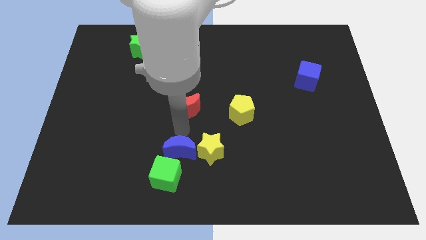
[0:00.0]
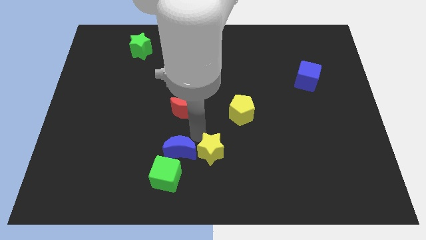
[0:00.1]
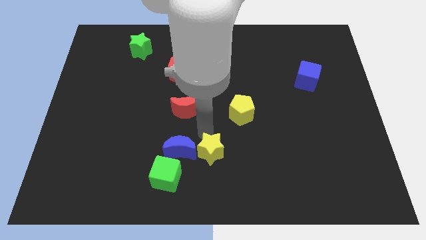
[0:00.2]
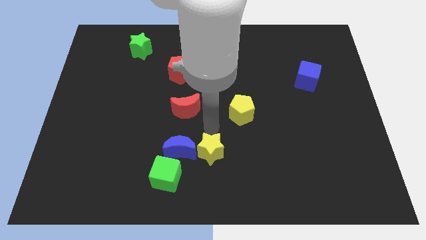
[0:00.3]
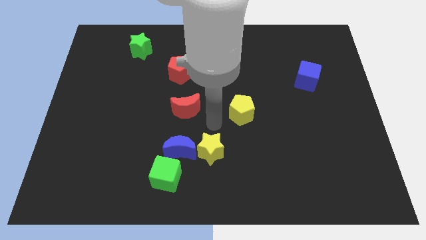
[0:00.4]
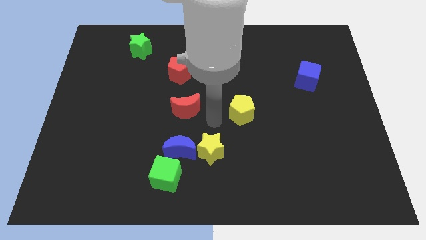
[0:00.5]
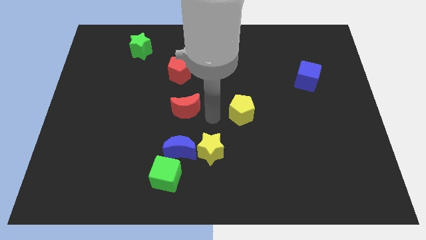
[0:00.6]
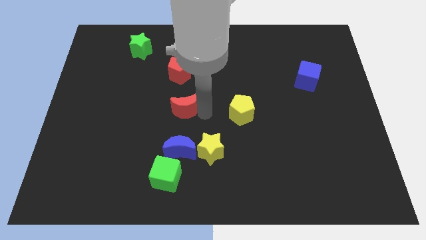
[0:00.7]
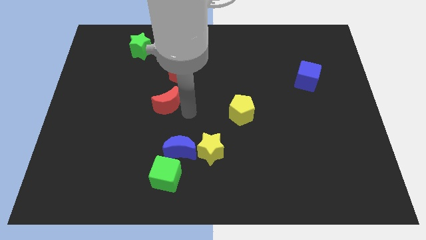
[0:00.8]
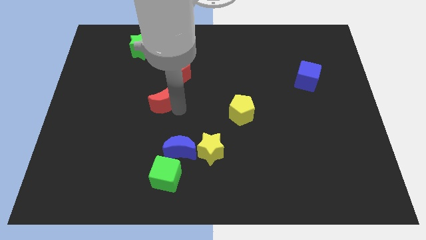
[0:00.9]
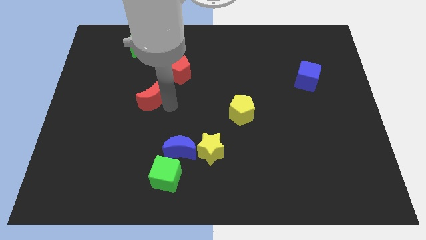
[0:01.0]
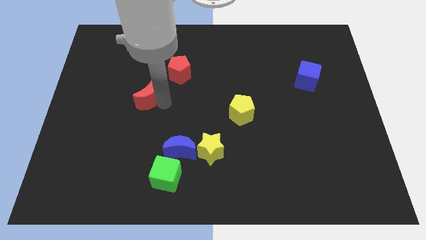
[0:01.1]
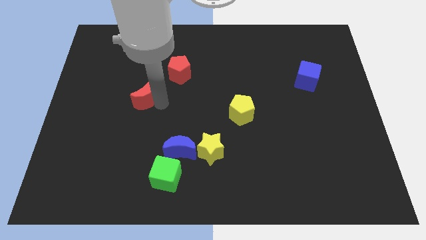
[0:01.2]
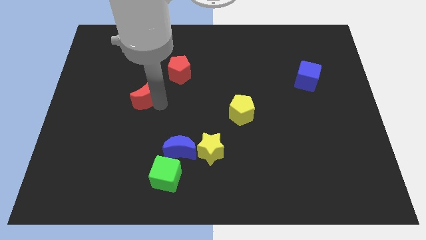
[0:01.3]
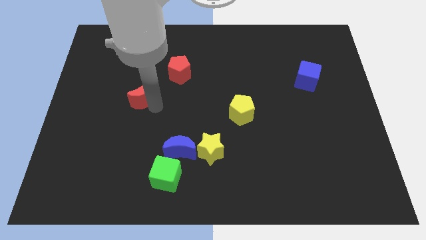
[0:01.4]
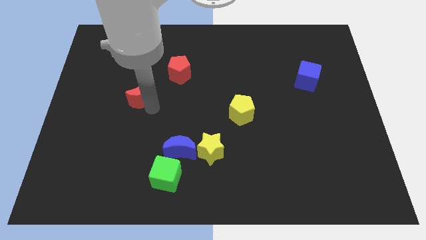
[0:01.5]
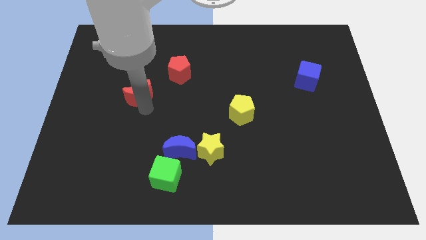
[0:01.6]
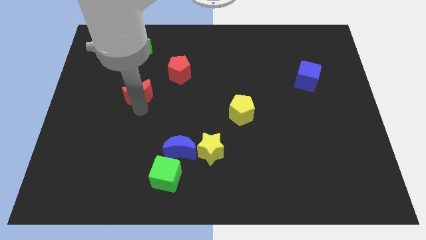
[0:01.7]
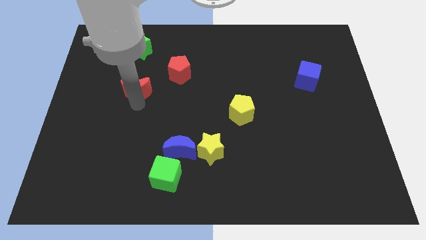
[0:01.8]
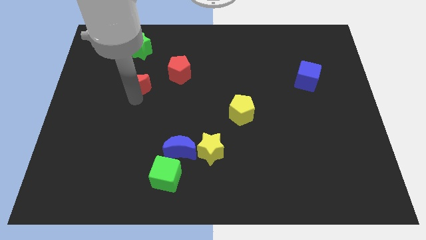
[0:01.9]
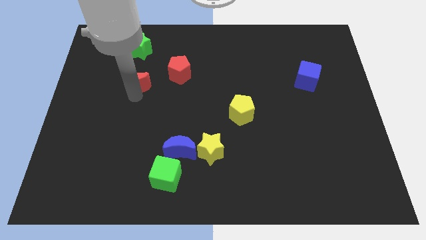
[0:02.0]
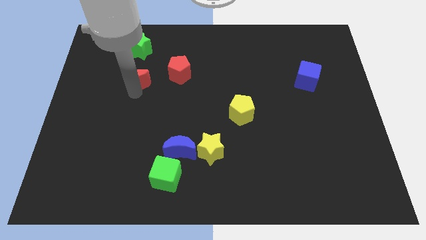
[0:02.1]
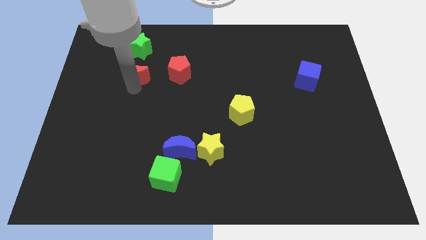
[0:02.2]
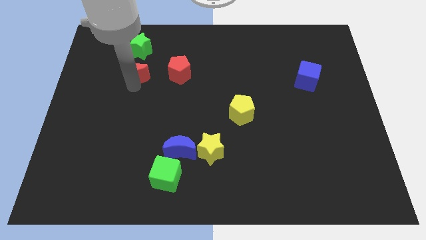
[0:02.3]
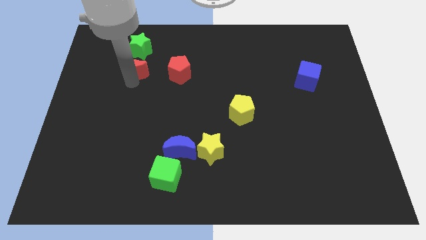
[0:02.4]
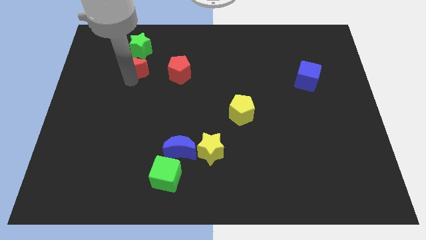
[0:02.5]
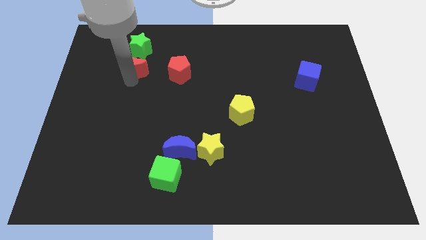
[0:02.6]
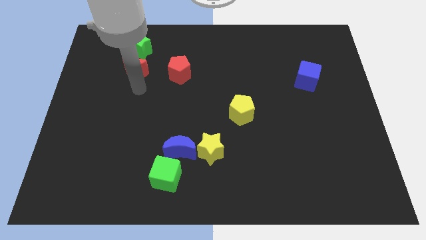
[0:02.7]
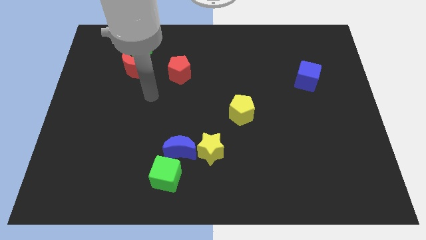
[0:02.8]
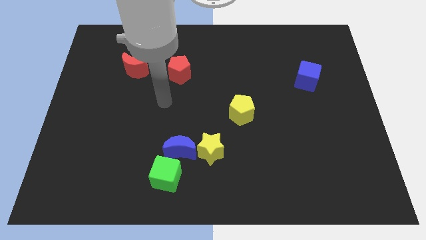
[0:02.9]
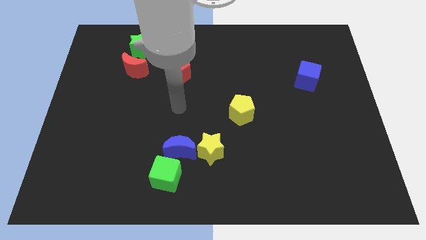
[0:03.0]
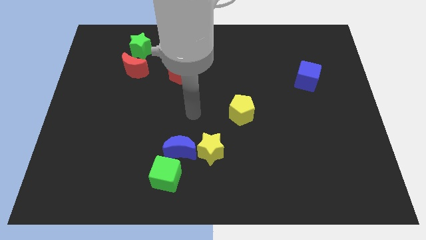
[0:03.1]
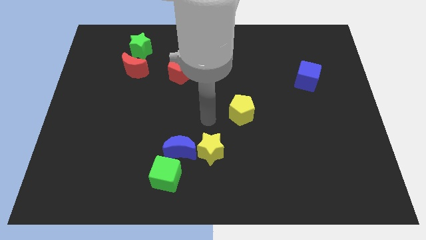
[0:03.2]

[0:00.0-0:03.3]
place the red crescent bottom of the green star

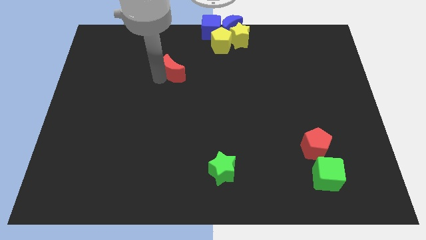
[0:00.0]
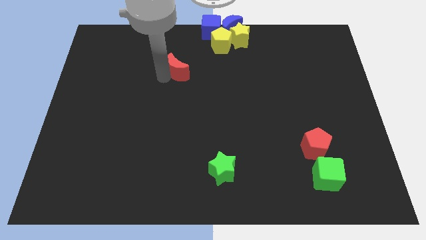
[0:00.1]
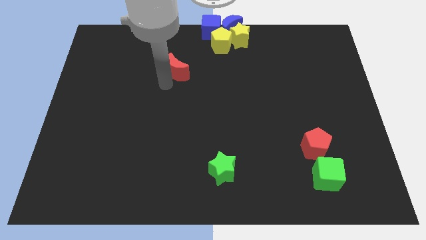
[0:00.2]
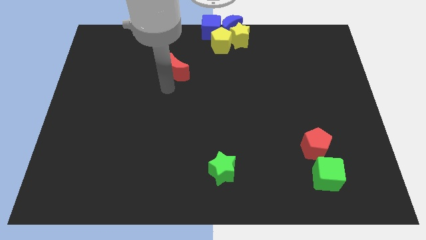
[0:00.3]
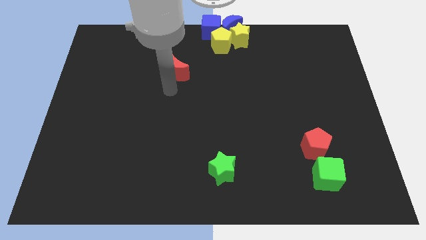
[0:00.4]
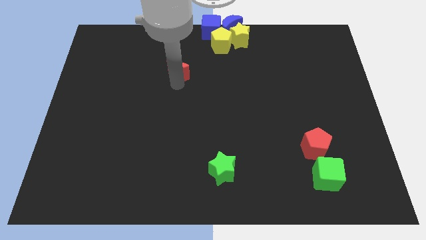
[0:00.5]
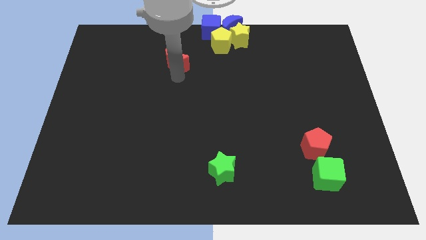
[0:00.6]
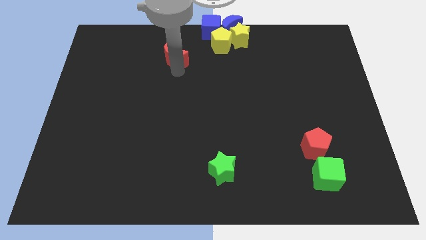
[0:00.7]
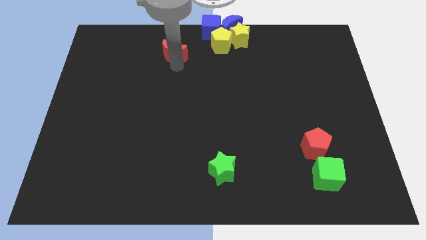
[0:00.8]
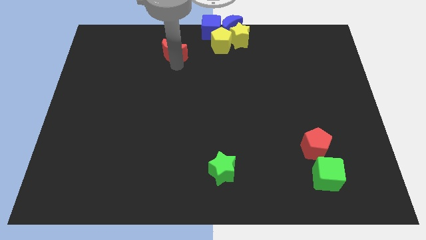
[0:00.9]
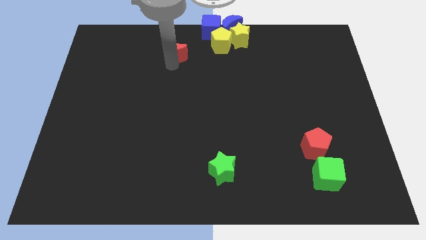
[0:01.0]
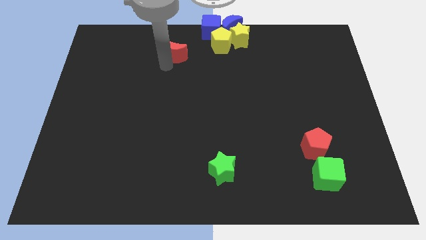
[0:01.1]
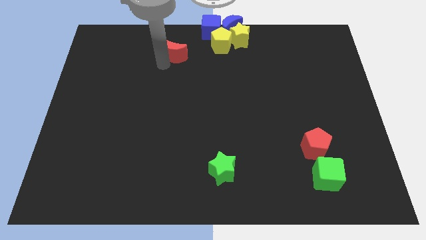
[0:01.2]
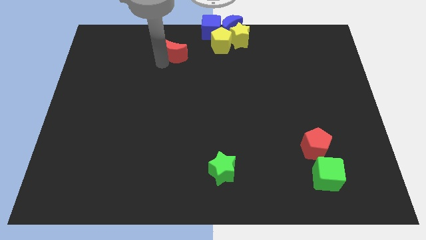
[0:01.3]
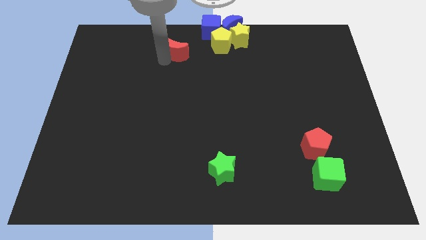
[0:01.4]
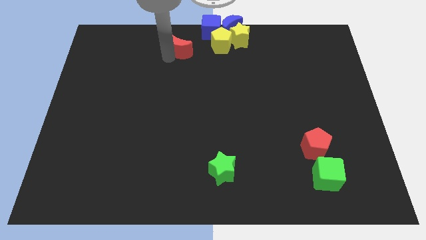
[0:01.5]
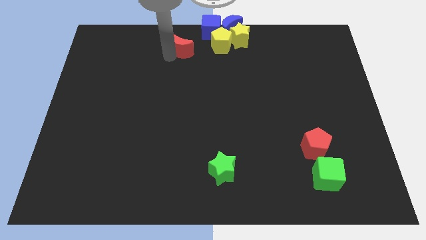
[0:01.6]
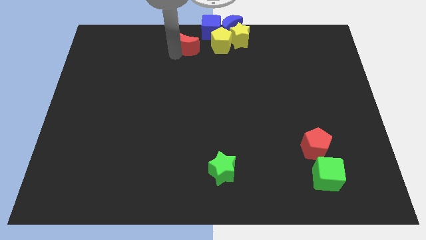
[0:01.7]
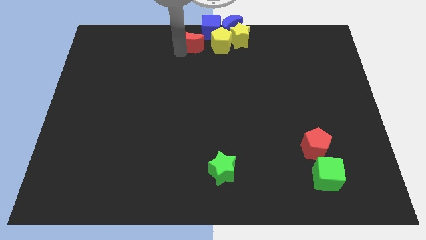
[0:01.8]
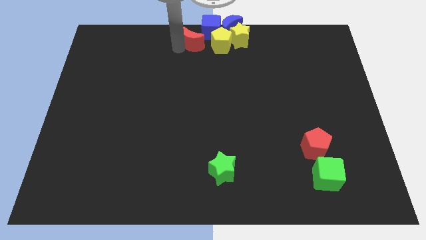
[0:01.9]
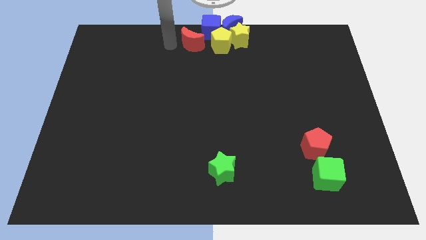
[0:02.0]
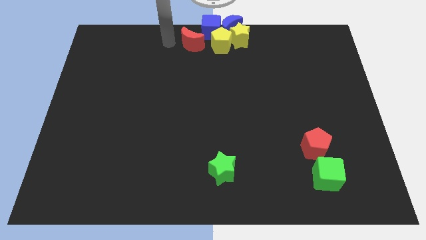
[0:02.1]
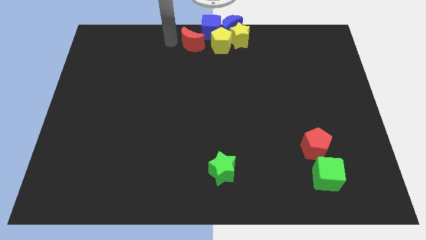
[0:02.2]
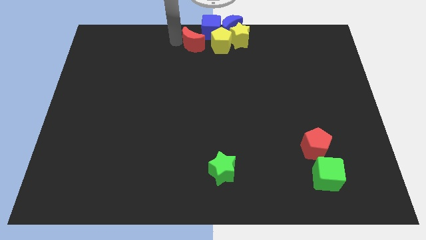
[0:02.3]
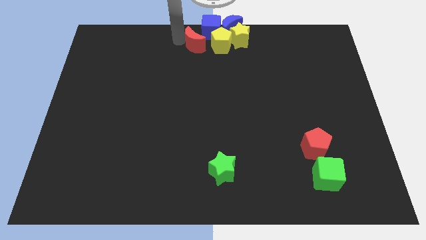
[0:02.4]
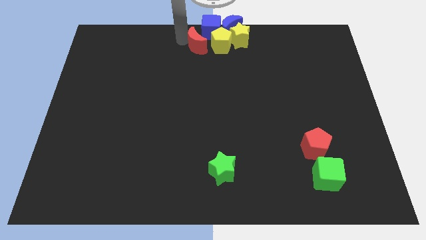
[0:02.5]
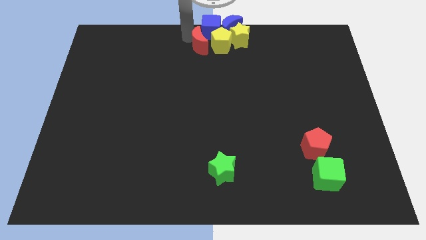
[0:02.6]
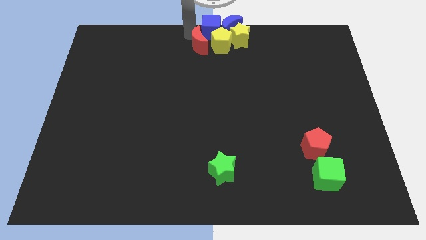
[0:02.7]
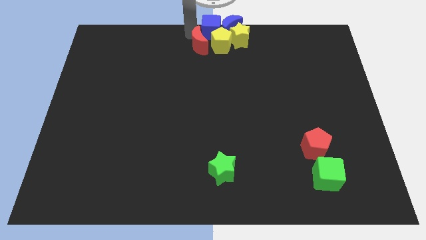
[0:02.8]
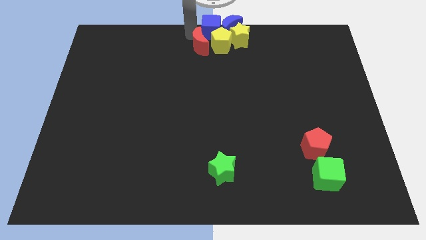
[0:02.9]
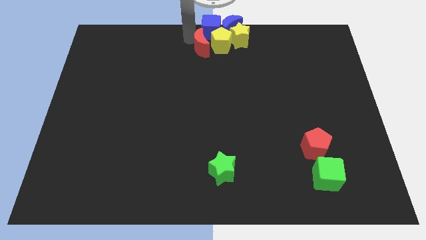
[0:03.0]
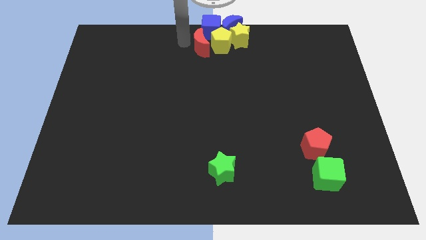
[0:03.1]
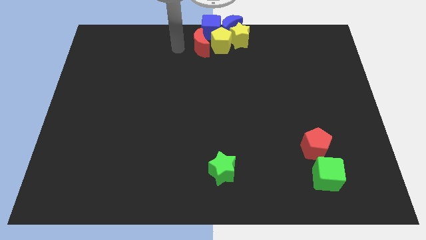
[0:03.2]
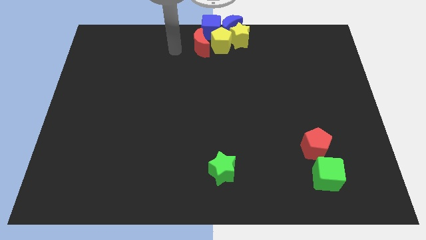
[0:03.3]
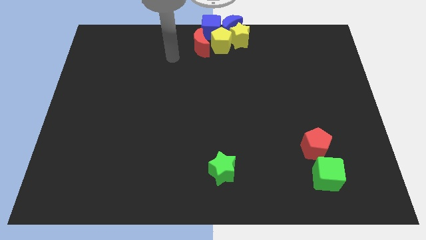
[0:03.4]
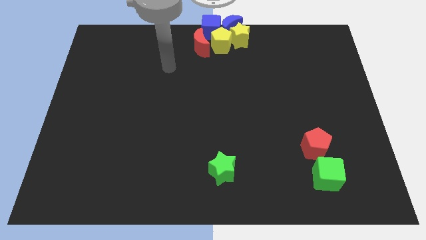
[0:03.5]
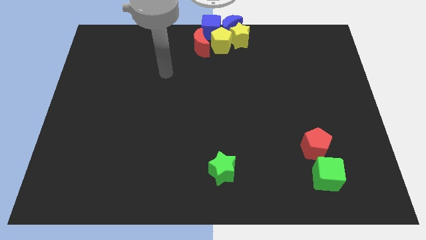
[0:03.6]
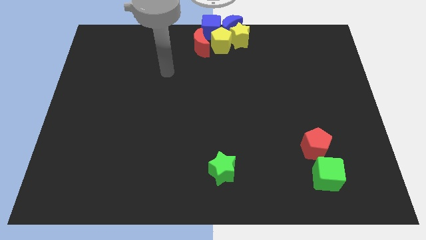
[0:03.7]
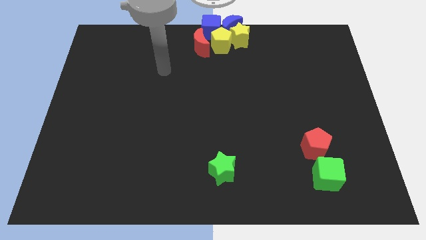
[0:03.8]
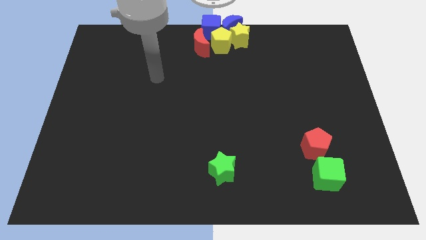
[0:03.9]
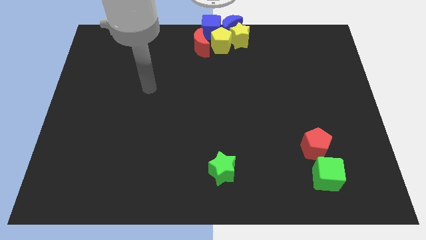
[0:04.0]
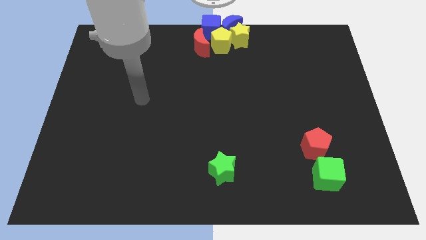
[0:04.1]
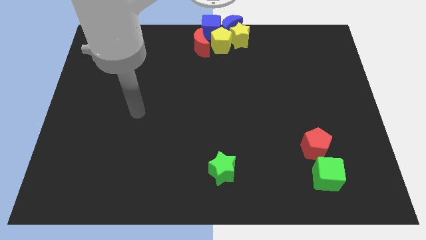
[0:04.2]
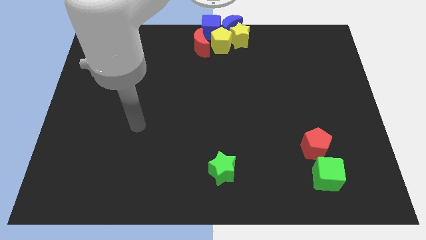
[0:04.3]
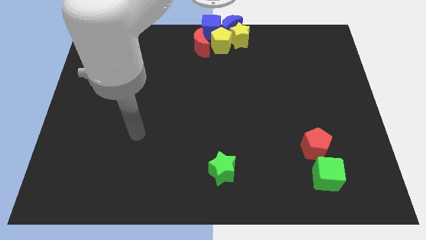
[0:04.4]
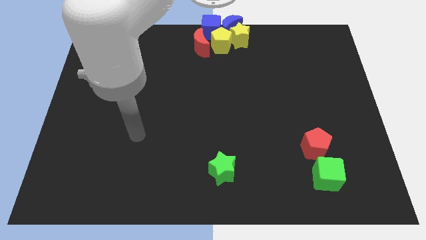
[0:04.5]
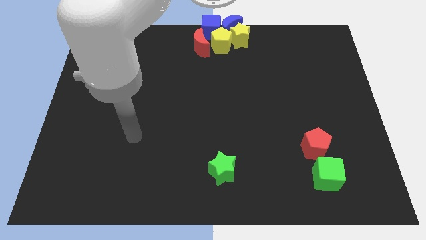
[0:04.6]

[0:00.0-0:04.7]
move the red crescent to the left side of the yellow pentagon

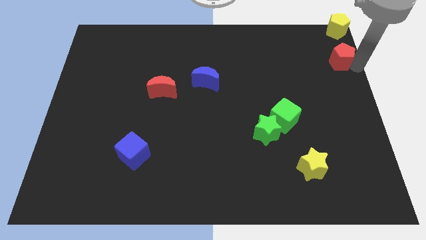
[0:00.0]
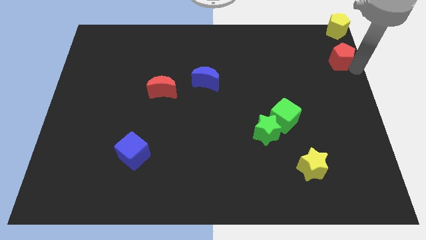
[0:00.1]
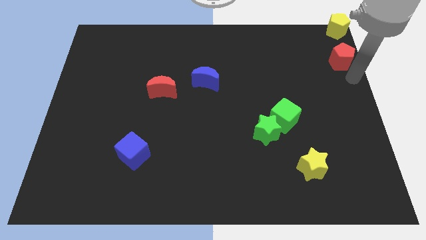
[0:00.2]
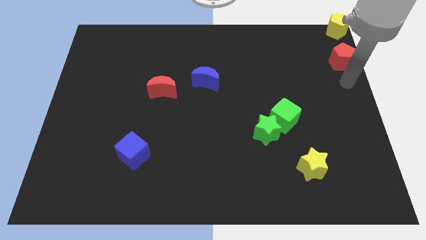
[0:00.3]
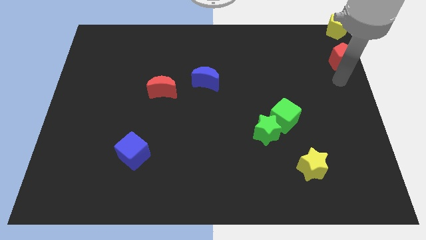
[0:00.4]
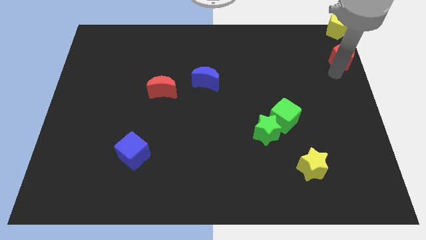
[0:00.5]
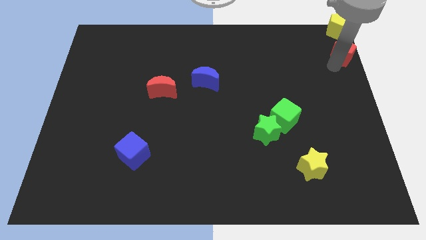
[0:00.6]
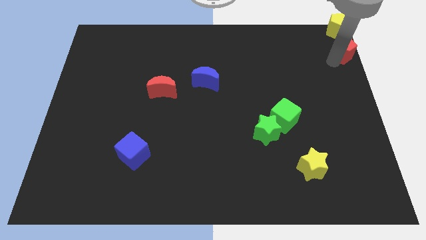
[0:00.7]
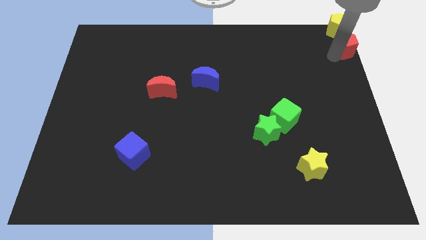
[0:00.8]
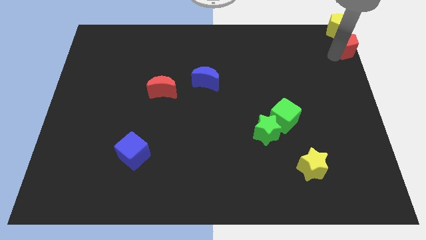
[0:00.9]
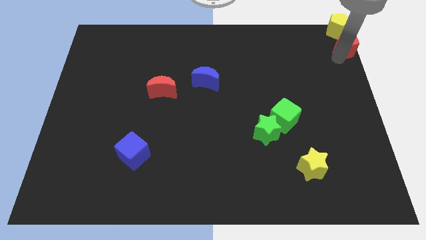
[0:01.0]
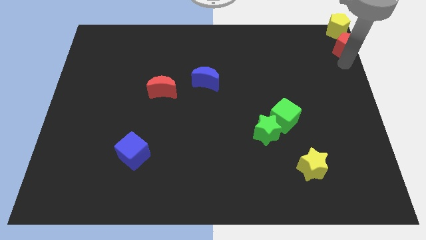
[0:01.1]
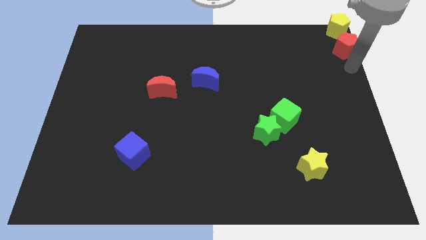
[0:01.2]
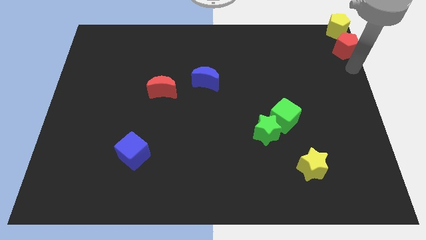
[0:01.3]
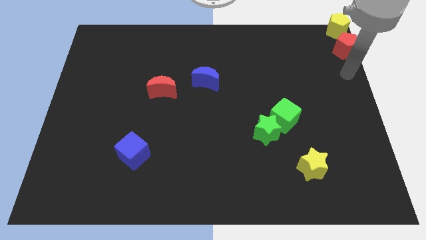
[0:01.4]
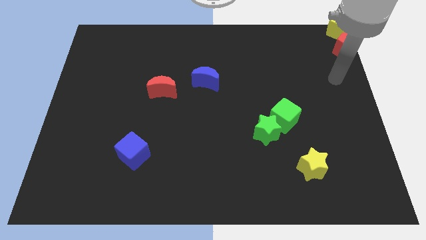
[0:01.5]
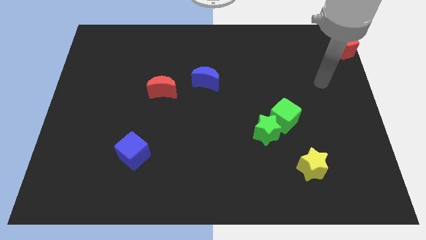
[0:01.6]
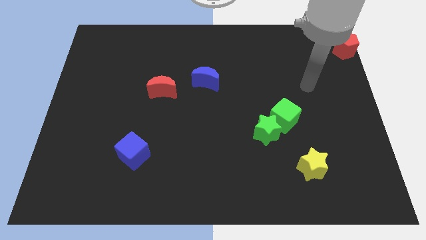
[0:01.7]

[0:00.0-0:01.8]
push the red pentagon close to the yellow pentagon
